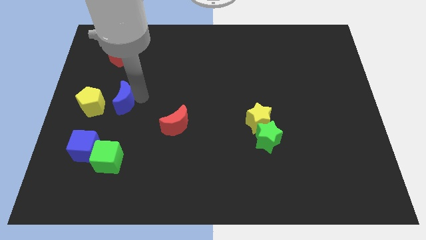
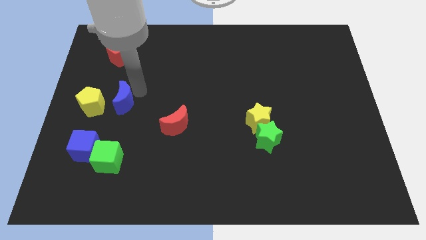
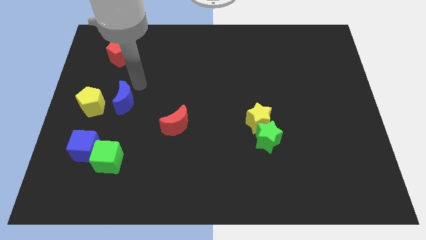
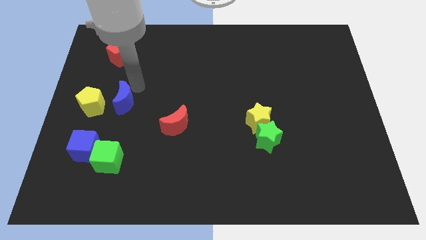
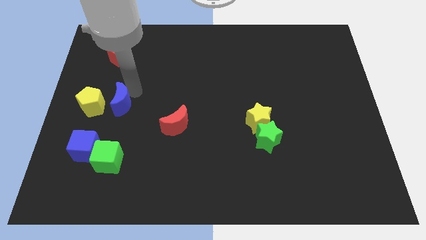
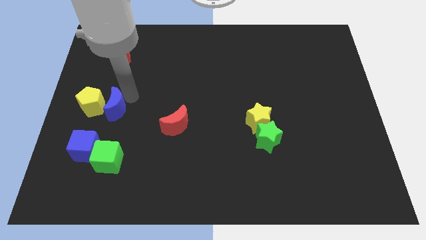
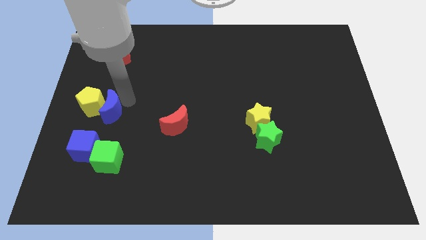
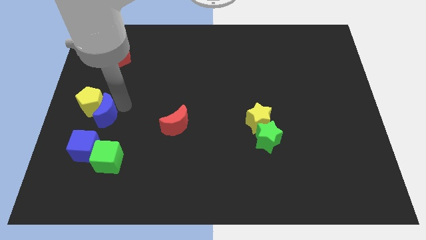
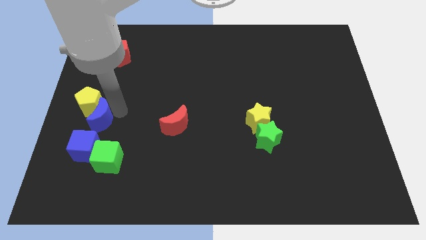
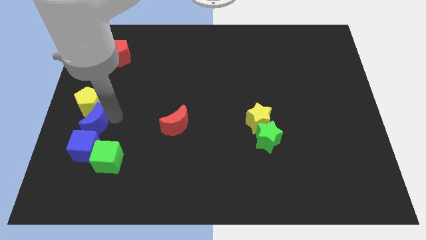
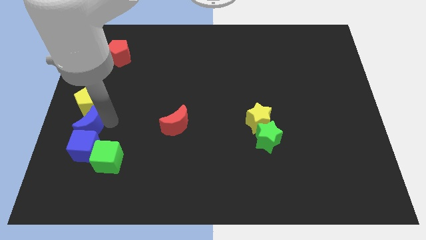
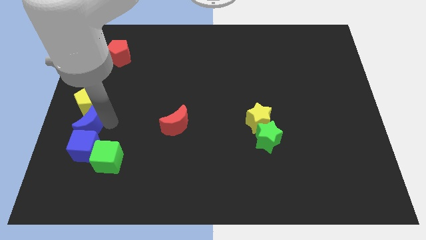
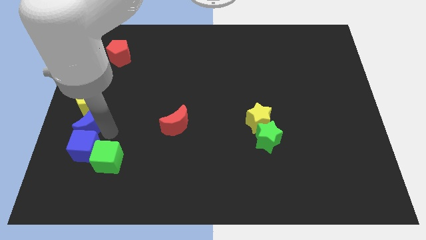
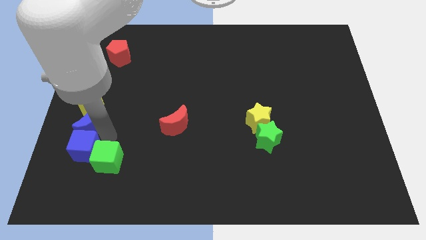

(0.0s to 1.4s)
place blue moon vertically above the blue cube

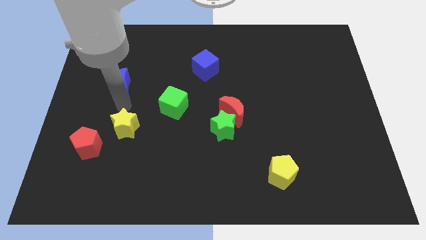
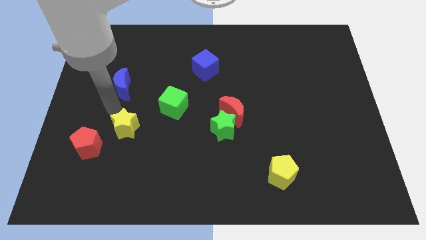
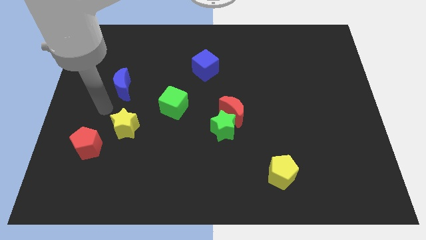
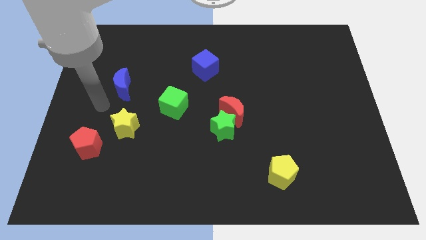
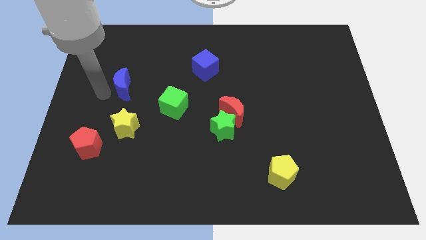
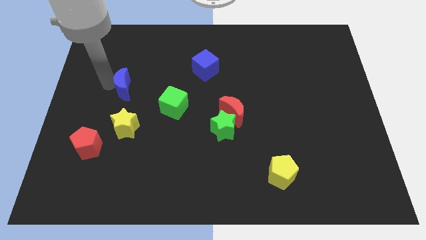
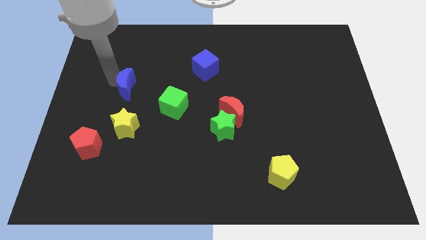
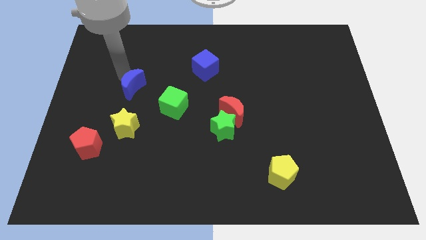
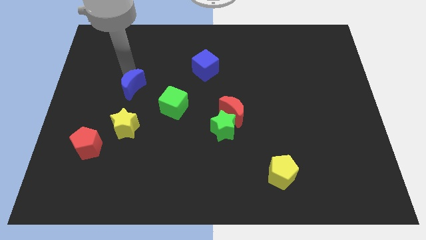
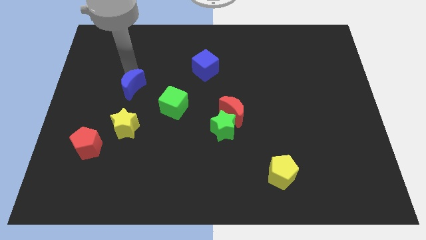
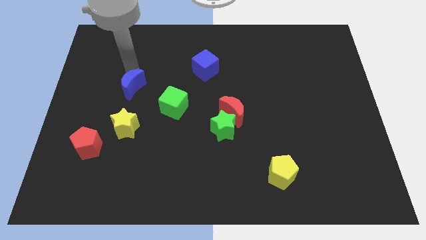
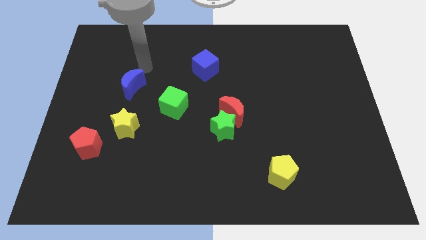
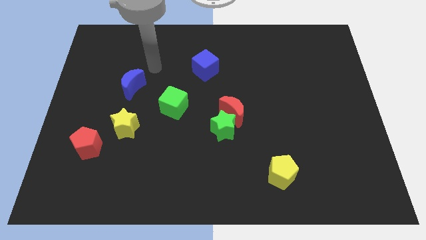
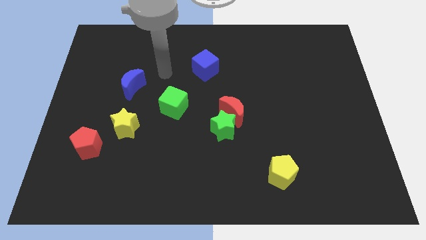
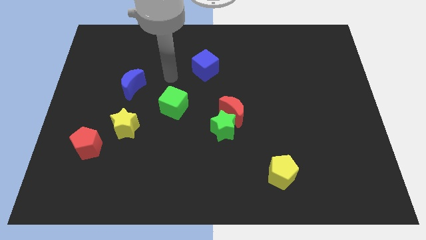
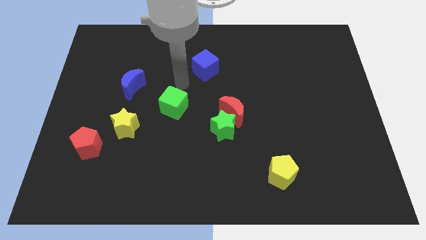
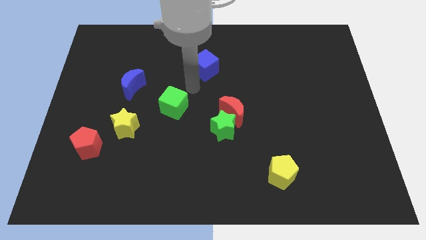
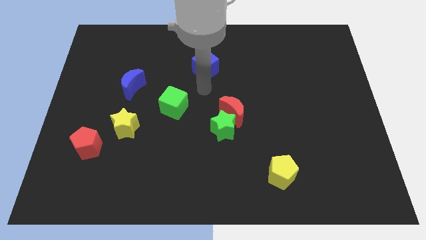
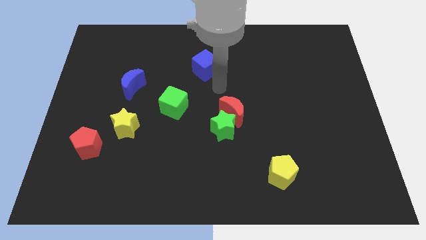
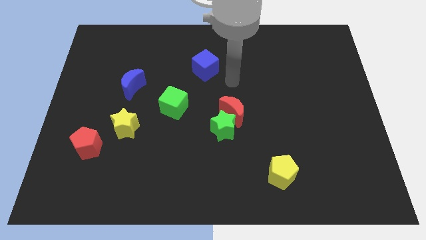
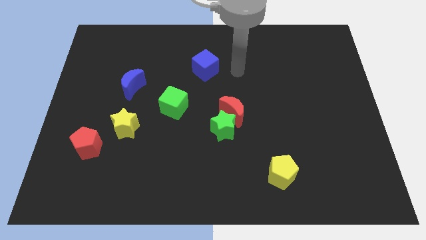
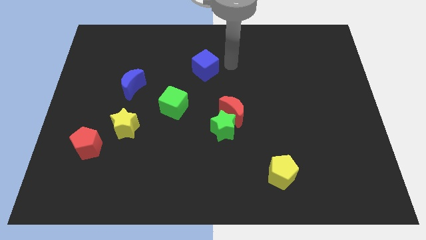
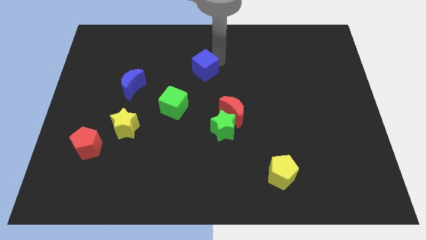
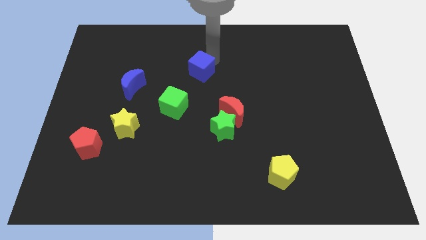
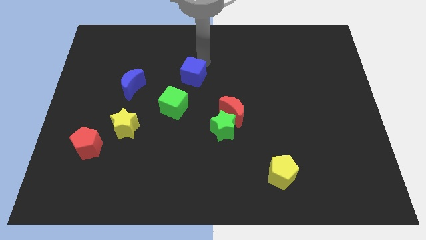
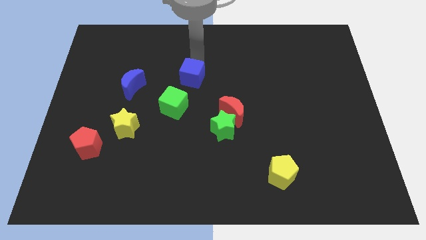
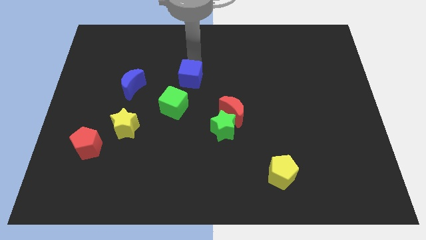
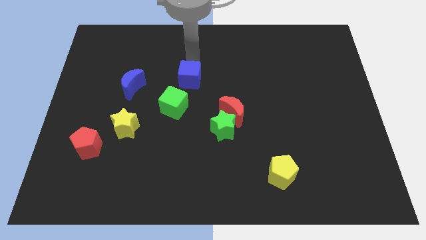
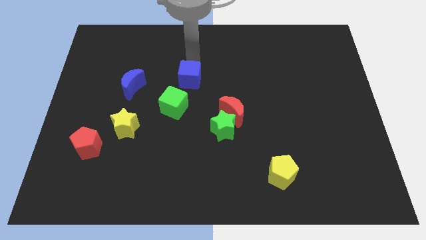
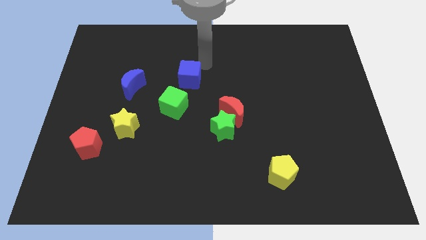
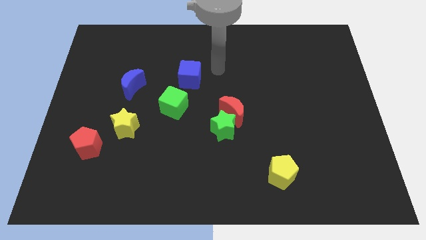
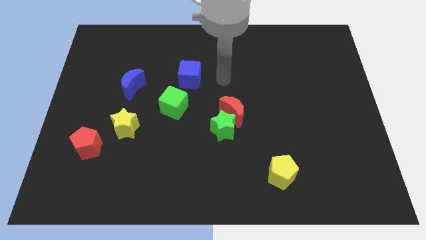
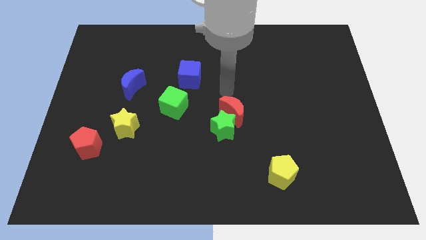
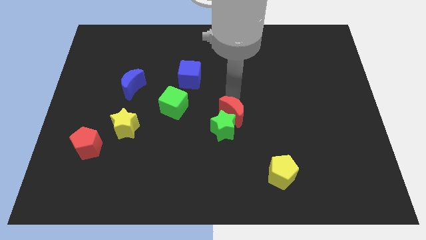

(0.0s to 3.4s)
tap the blue blocks

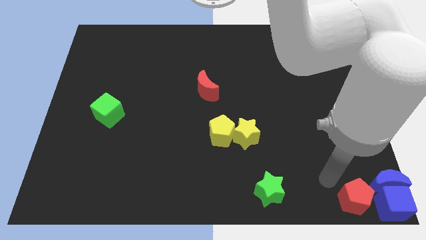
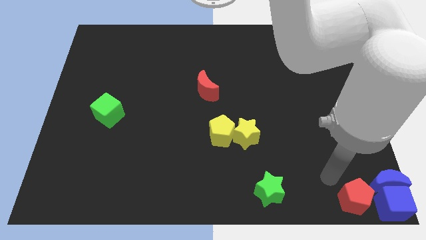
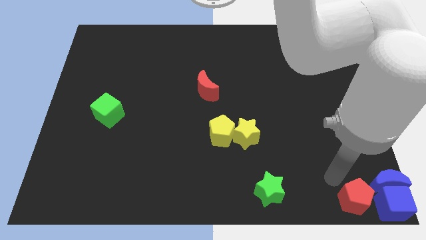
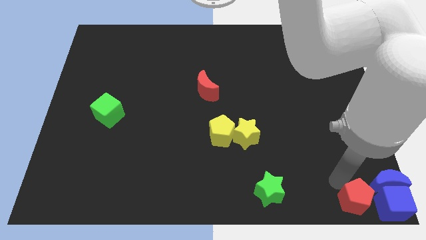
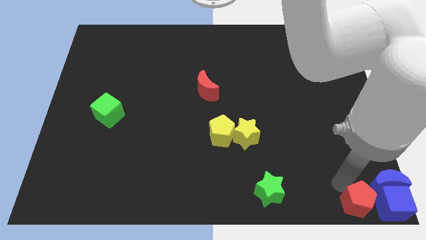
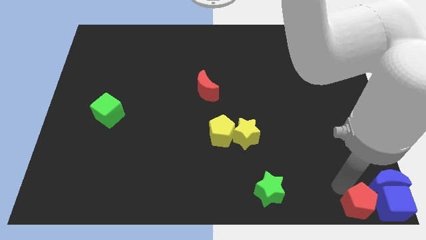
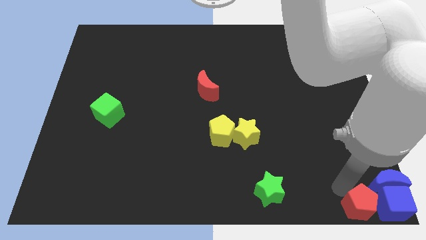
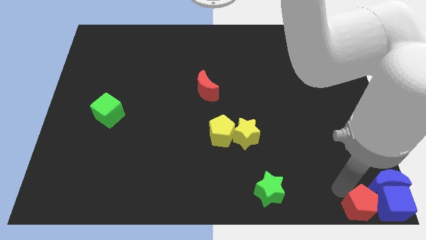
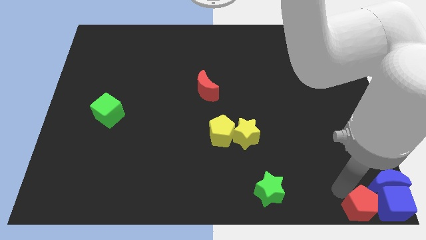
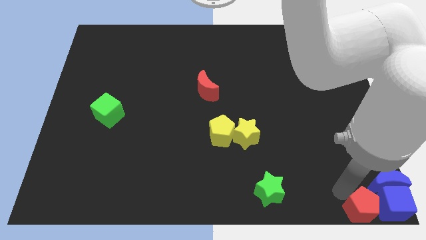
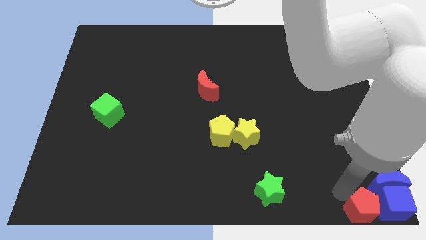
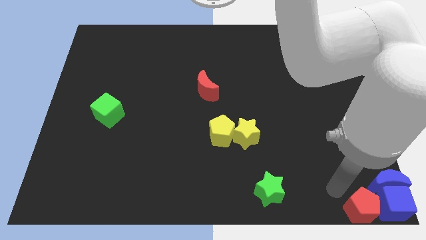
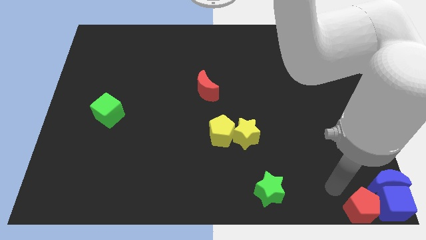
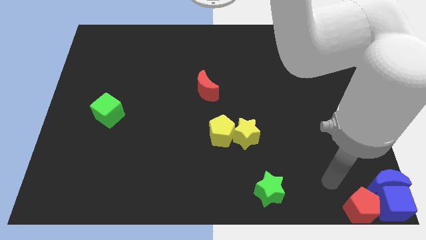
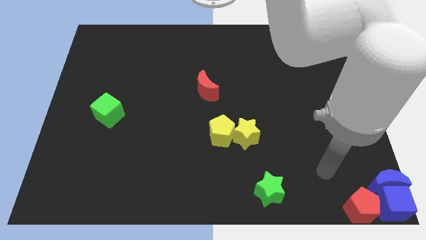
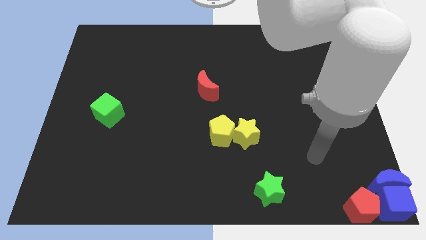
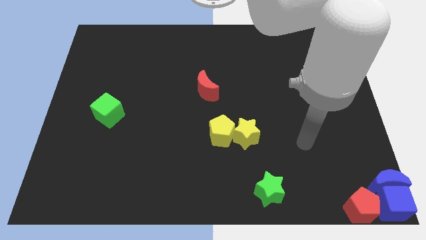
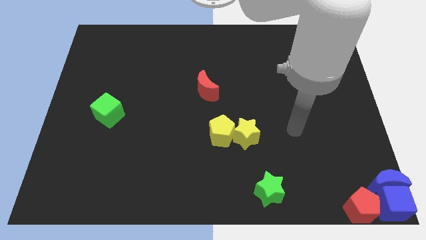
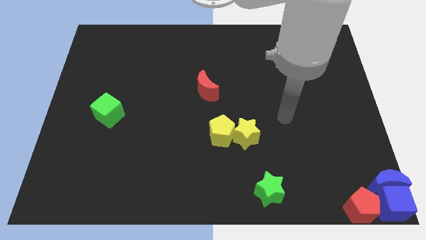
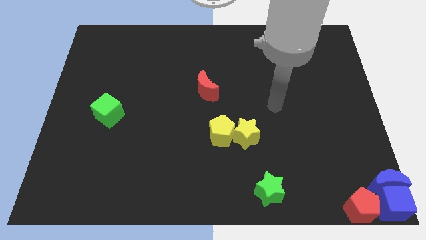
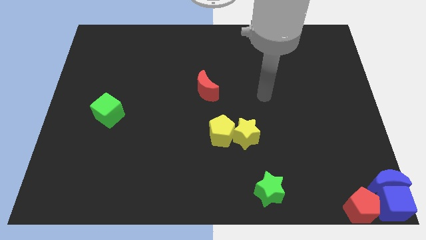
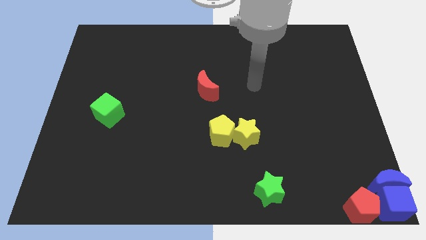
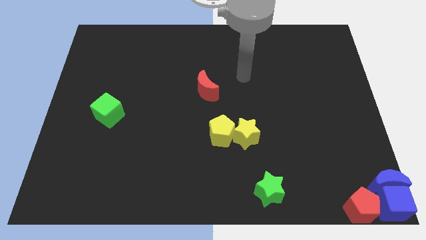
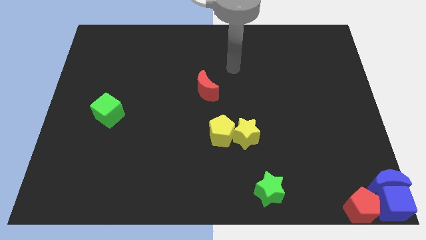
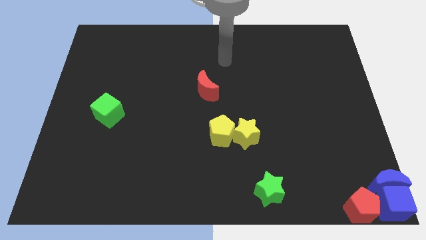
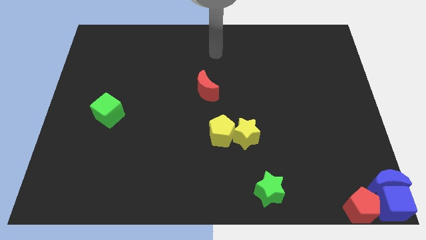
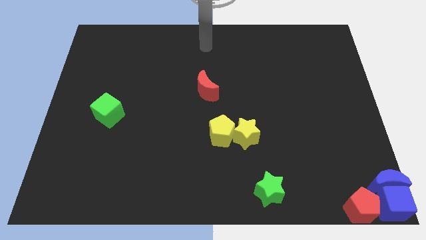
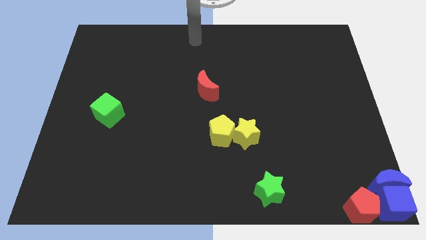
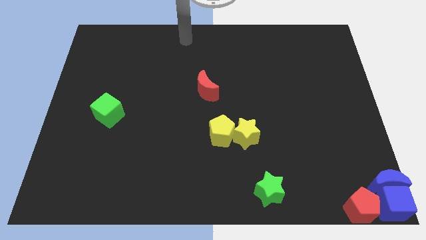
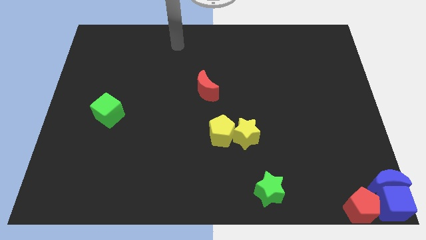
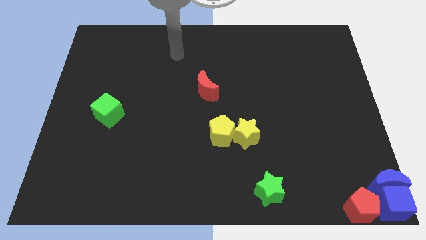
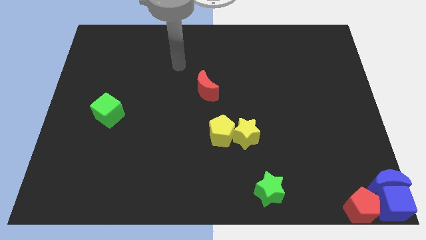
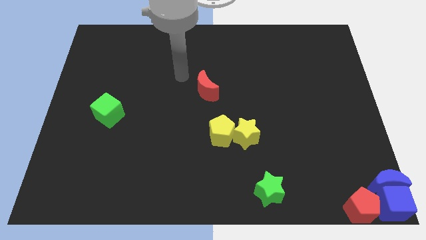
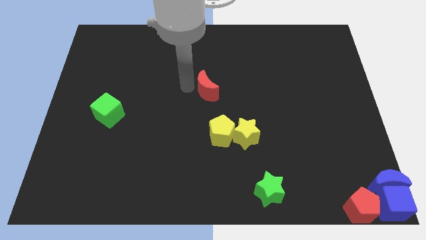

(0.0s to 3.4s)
move your arm away from red pentagon

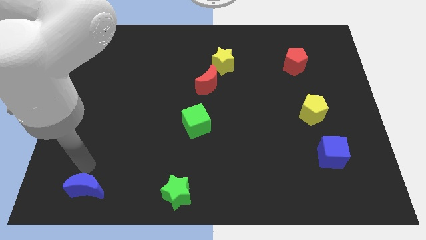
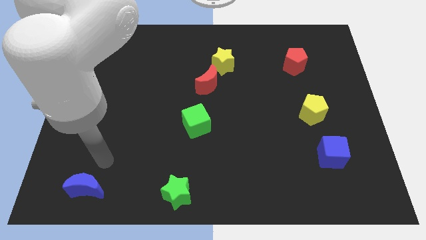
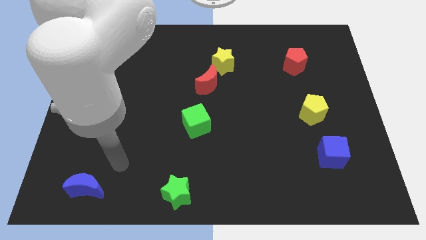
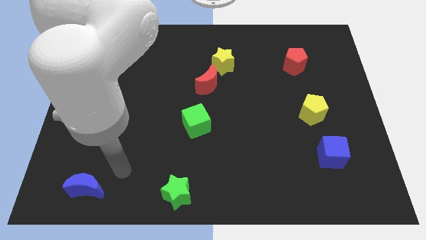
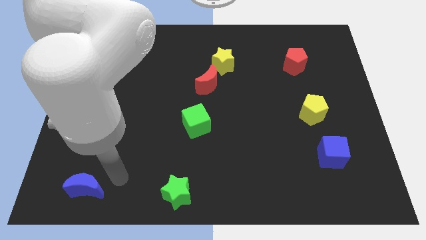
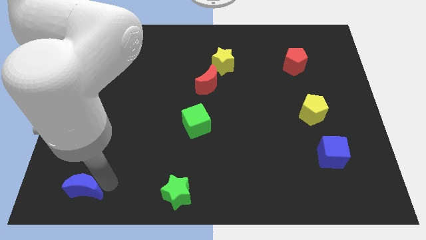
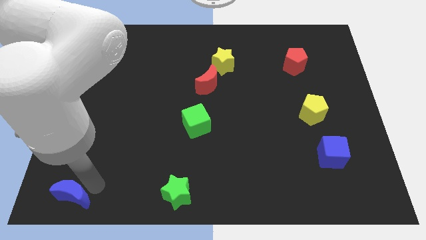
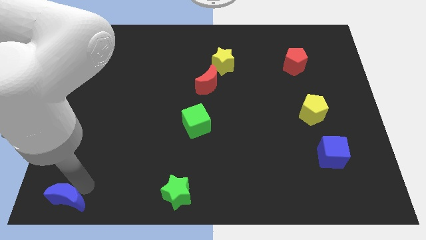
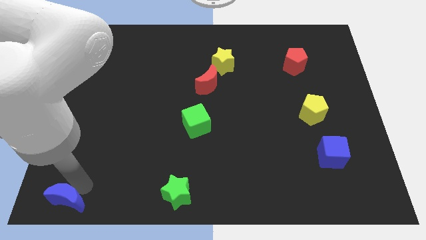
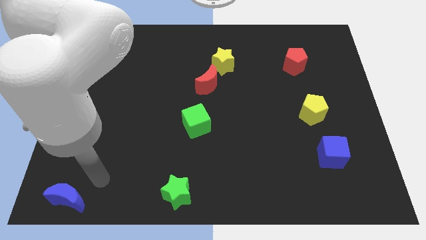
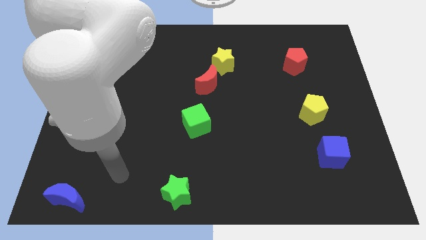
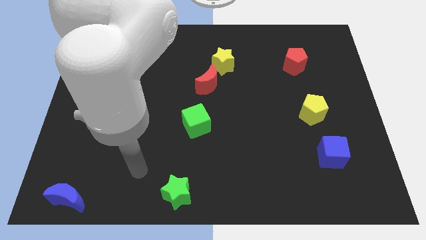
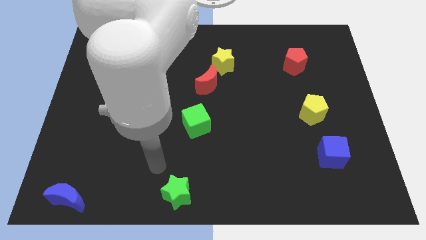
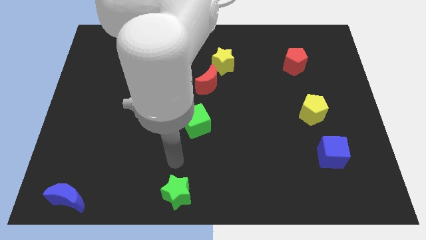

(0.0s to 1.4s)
push the blue crescent slightly to the bottom
